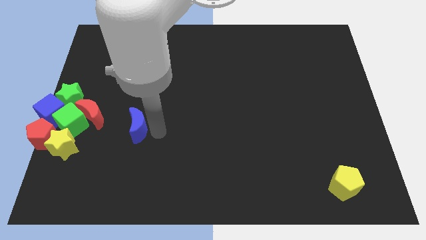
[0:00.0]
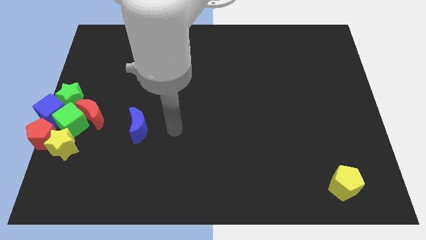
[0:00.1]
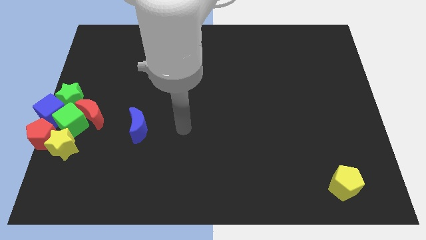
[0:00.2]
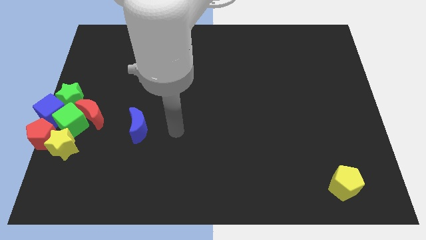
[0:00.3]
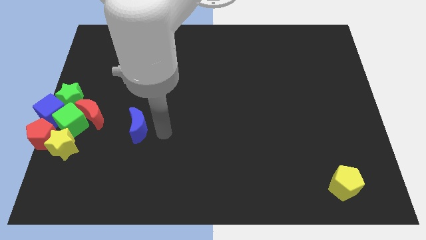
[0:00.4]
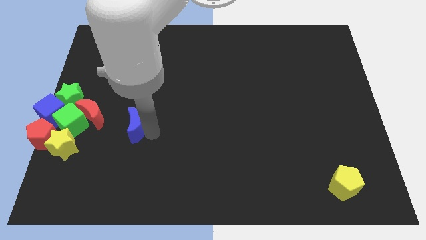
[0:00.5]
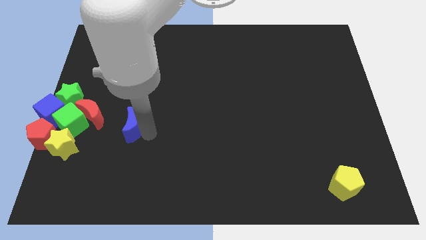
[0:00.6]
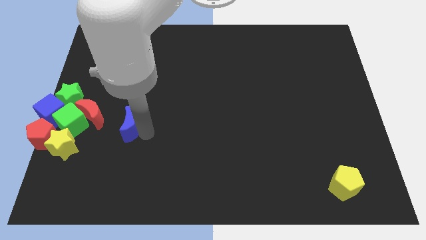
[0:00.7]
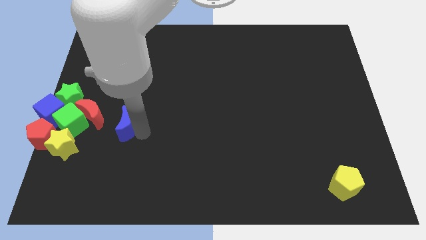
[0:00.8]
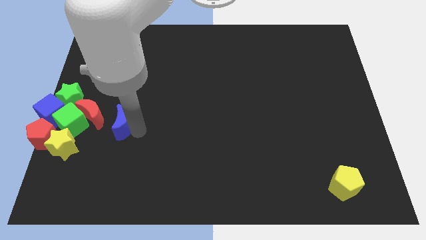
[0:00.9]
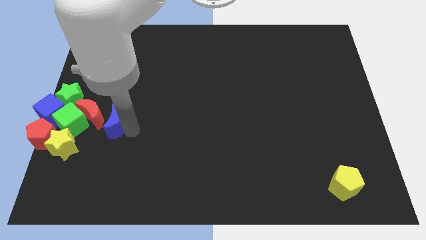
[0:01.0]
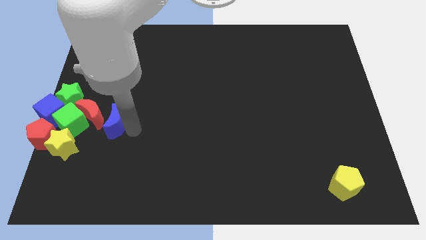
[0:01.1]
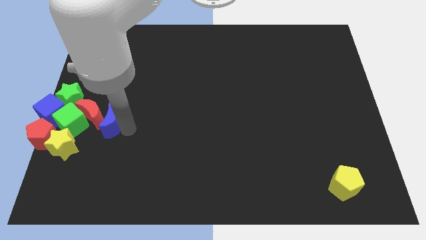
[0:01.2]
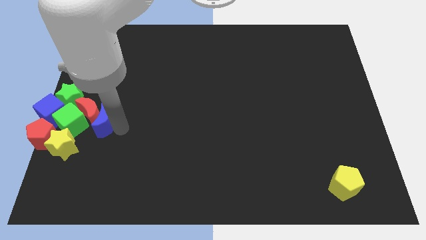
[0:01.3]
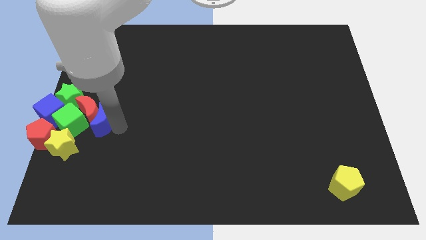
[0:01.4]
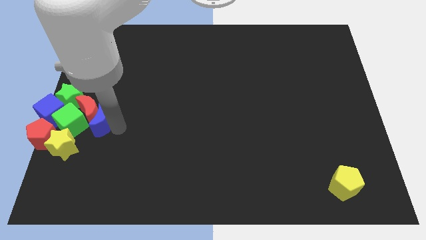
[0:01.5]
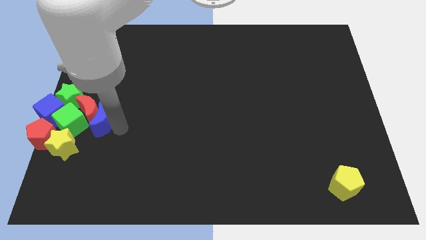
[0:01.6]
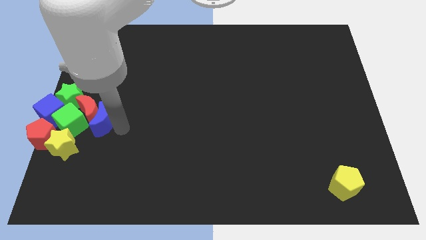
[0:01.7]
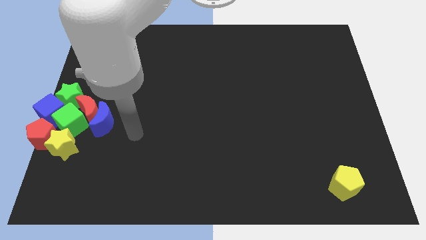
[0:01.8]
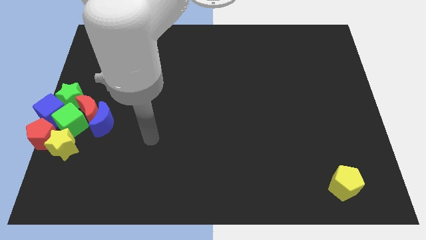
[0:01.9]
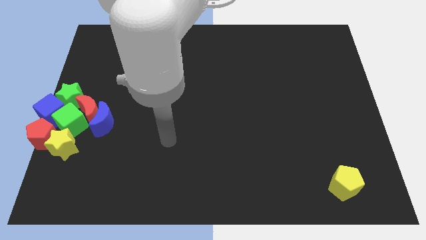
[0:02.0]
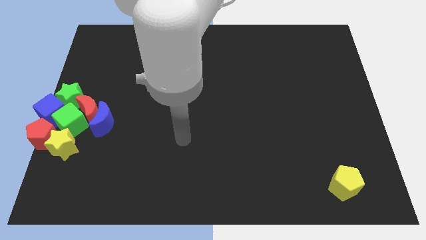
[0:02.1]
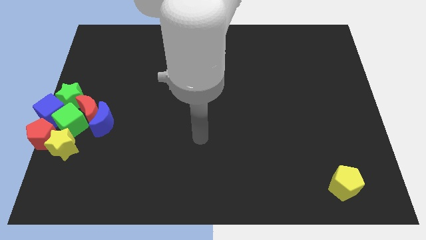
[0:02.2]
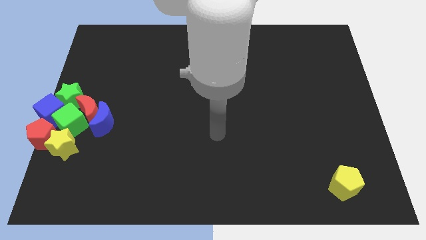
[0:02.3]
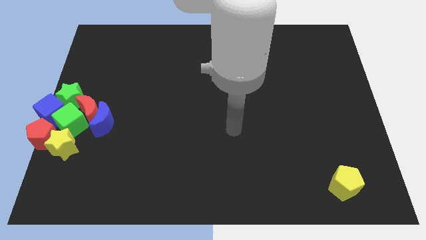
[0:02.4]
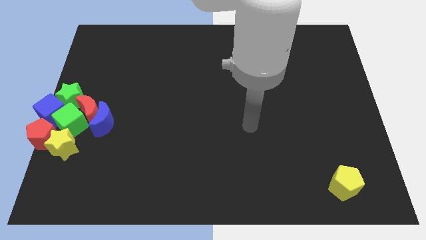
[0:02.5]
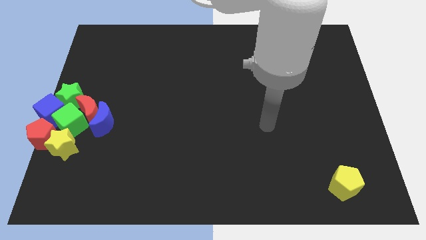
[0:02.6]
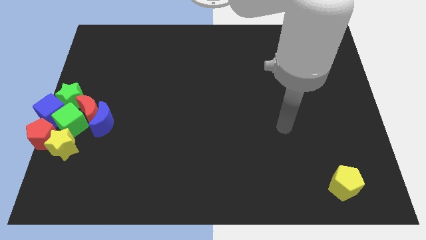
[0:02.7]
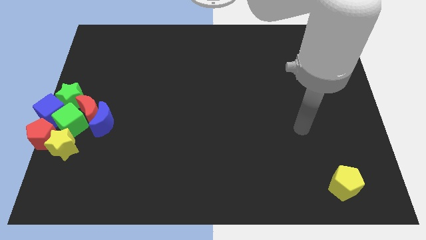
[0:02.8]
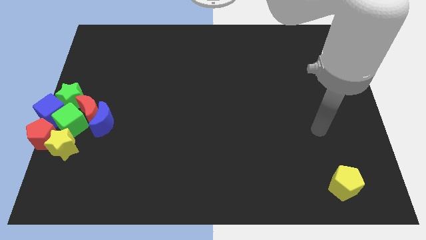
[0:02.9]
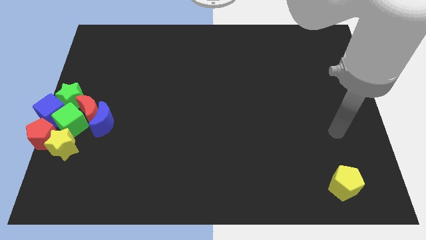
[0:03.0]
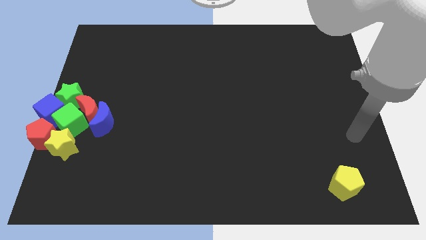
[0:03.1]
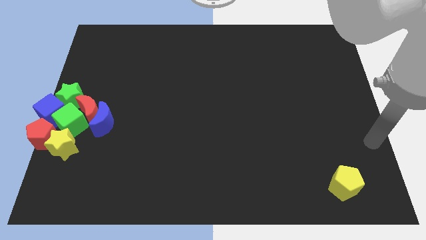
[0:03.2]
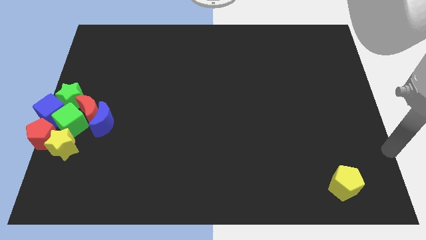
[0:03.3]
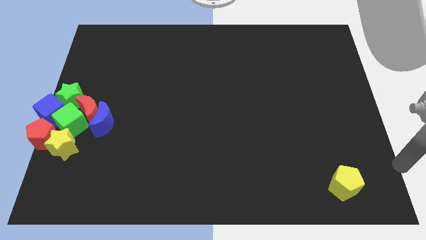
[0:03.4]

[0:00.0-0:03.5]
move blue moon close to red moon

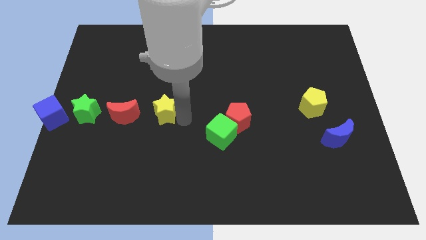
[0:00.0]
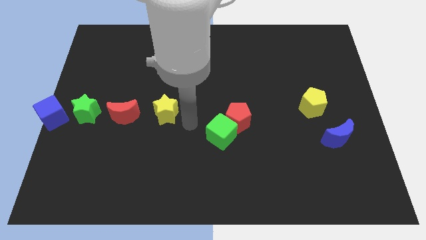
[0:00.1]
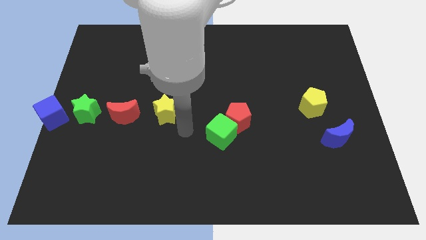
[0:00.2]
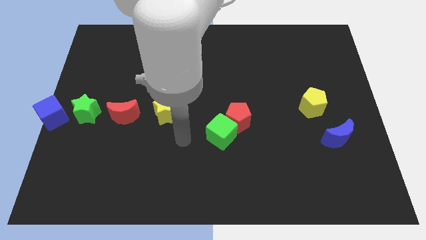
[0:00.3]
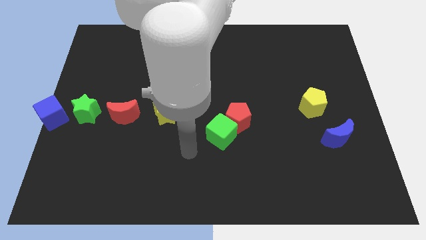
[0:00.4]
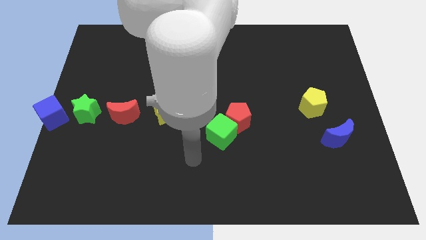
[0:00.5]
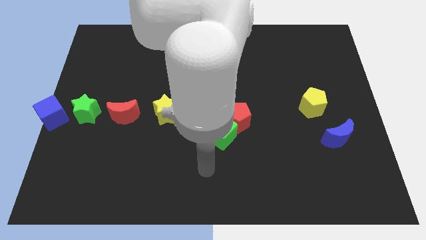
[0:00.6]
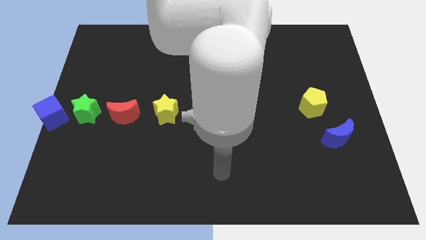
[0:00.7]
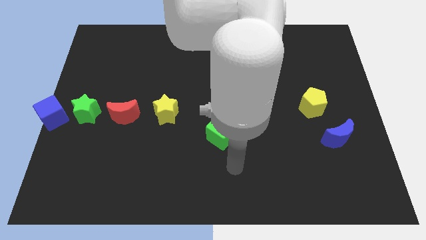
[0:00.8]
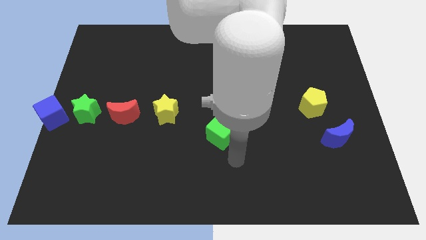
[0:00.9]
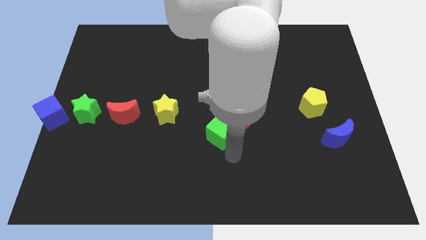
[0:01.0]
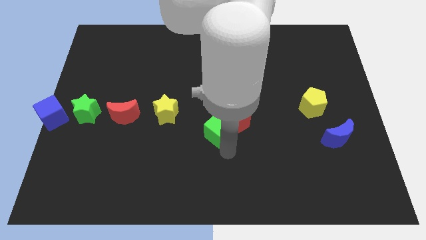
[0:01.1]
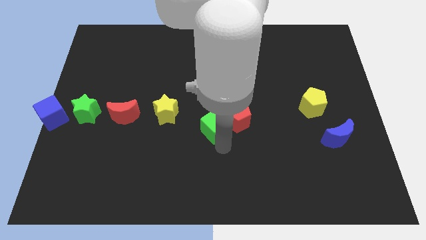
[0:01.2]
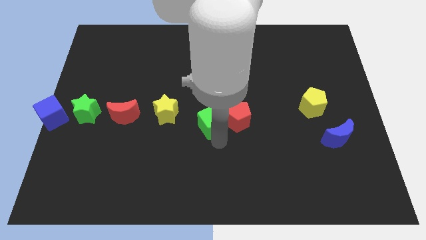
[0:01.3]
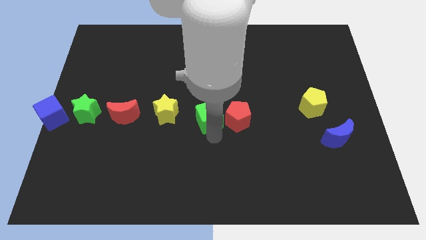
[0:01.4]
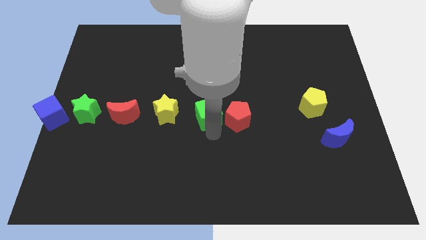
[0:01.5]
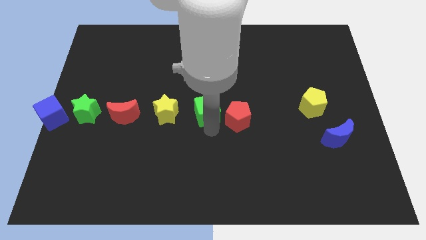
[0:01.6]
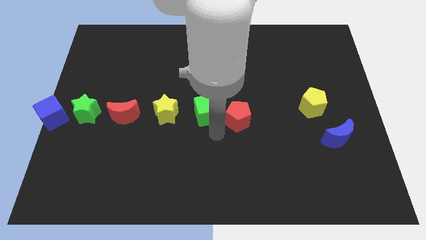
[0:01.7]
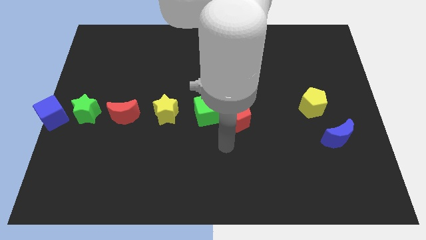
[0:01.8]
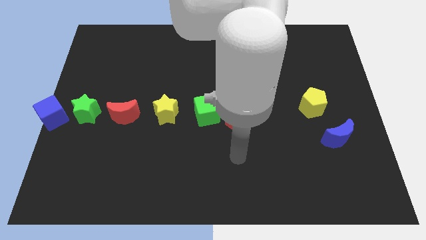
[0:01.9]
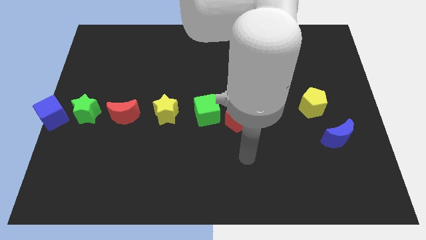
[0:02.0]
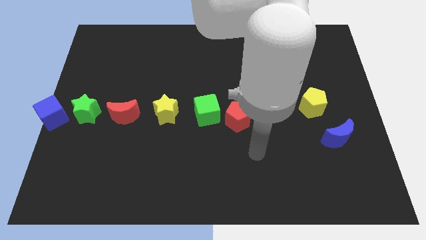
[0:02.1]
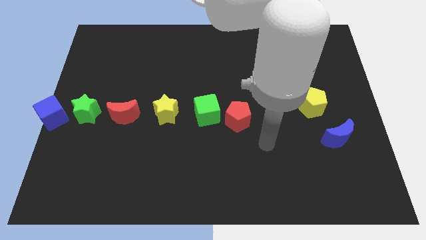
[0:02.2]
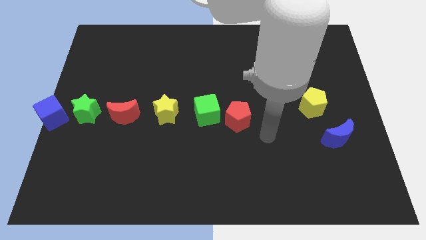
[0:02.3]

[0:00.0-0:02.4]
place green cube beside yellow star

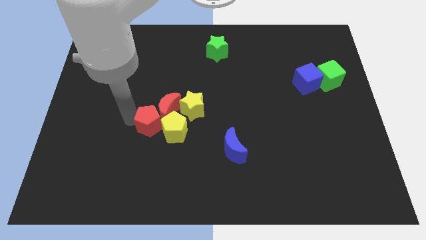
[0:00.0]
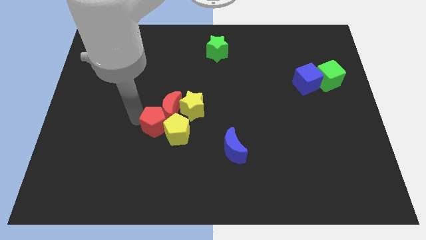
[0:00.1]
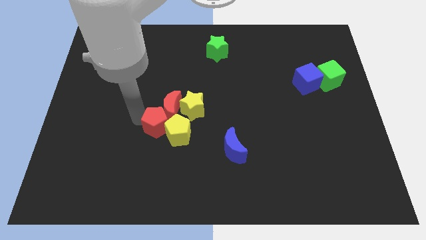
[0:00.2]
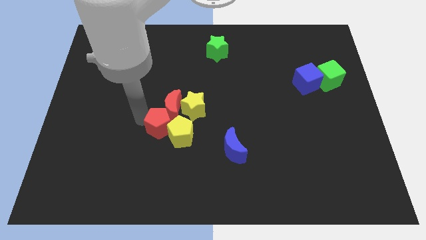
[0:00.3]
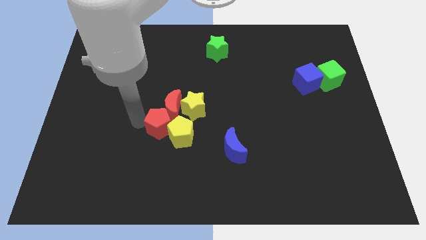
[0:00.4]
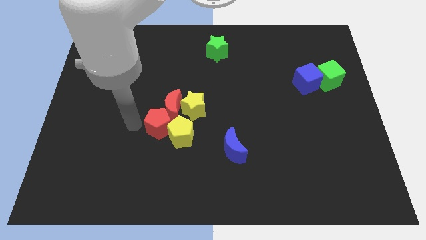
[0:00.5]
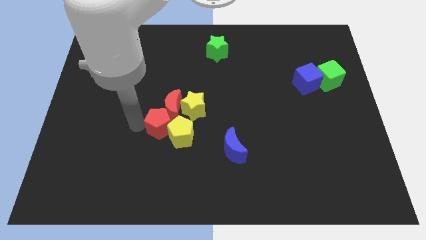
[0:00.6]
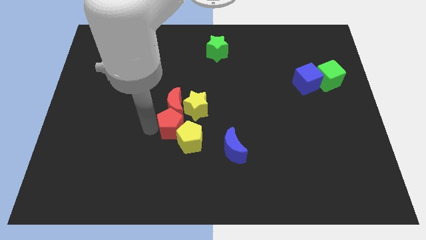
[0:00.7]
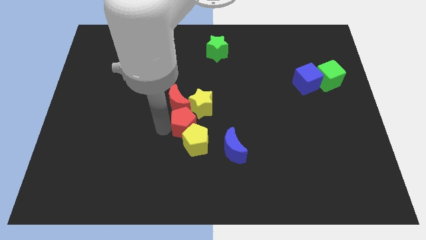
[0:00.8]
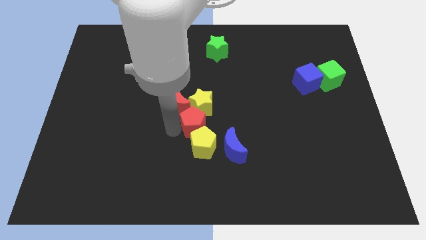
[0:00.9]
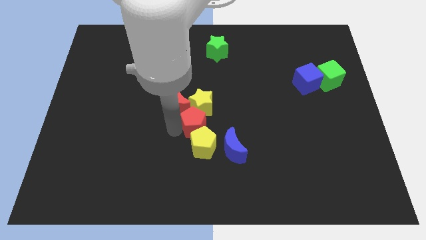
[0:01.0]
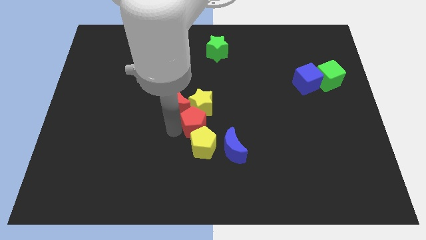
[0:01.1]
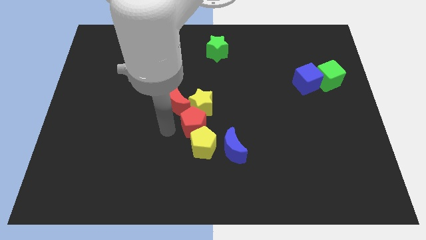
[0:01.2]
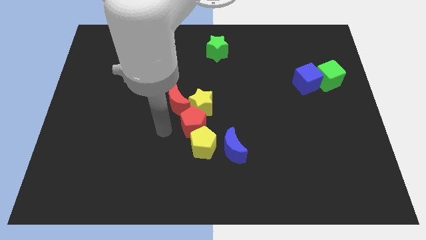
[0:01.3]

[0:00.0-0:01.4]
push a group of blocks to the center of the board

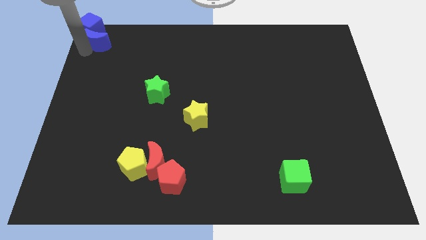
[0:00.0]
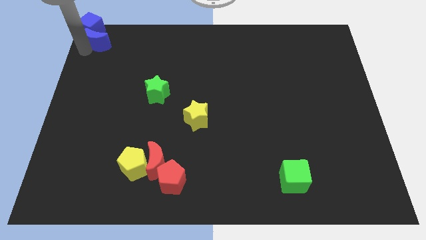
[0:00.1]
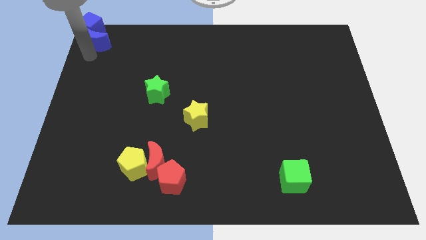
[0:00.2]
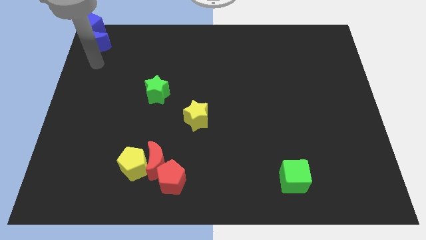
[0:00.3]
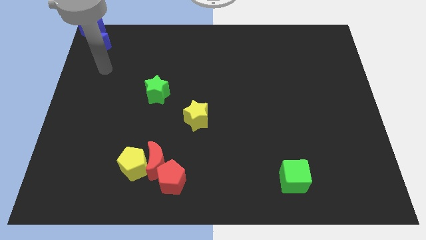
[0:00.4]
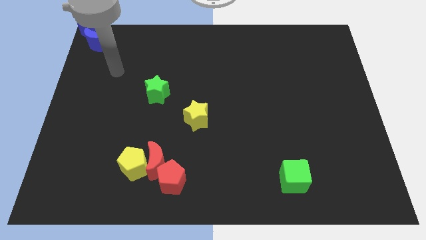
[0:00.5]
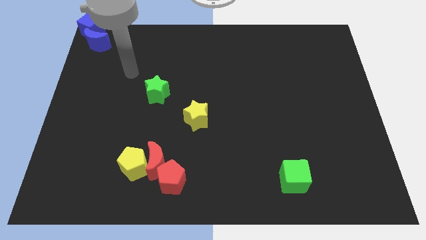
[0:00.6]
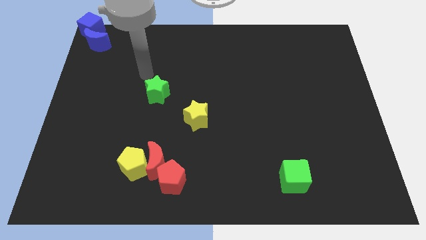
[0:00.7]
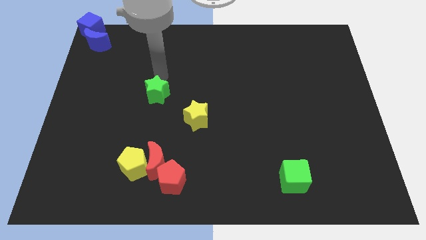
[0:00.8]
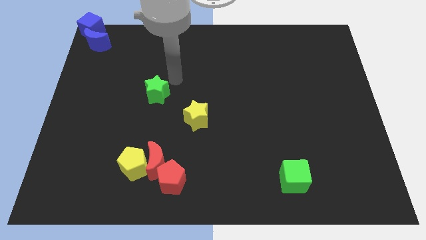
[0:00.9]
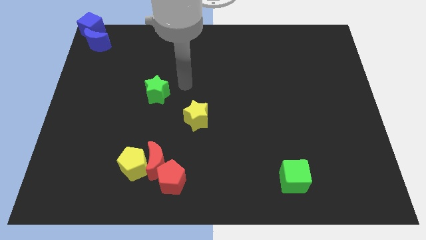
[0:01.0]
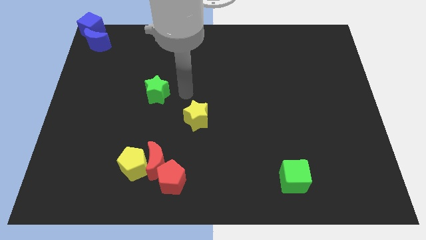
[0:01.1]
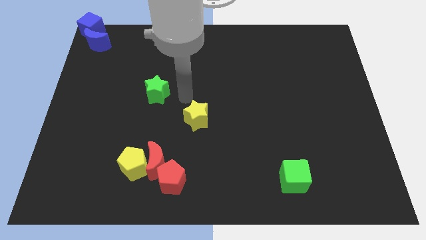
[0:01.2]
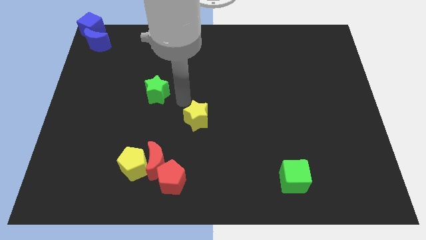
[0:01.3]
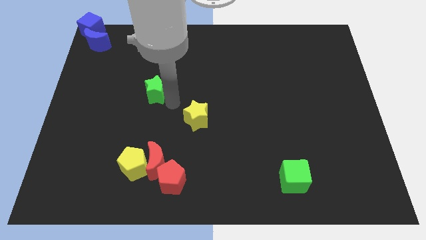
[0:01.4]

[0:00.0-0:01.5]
go away from the blue moon

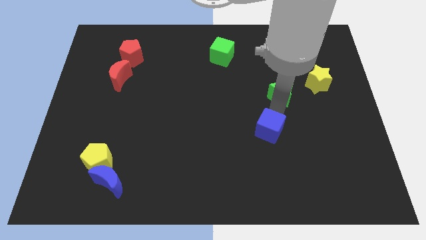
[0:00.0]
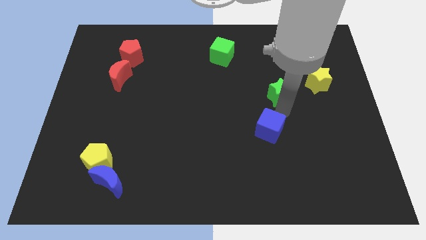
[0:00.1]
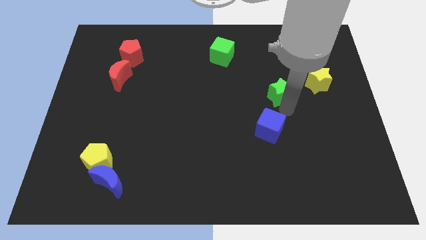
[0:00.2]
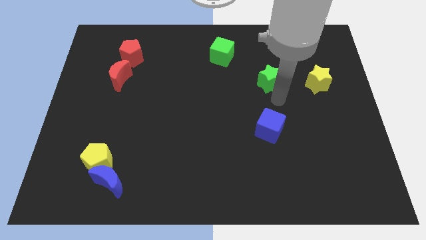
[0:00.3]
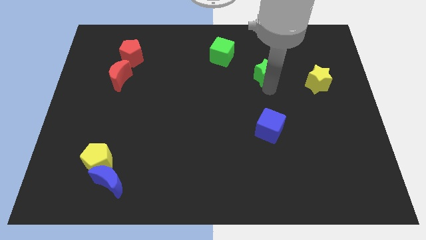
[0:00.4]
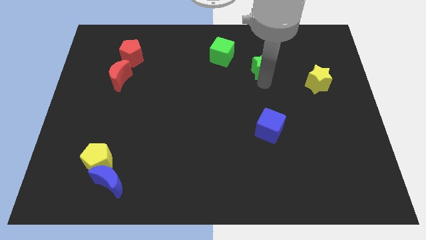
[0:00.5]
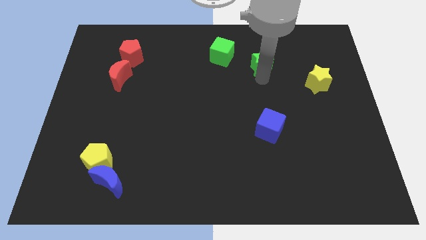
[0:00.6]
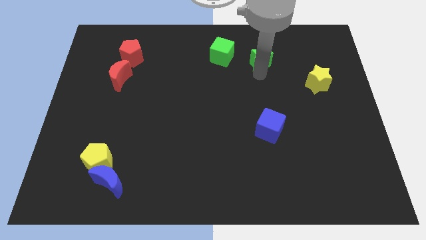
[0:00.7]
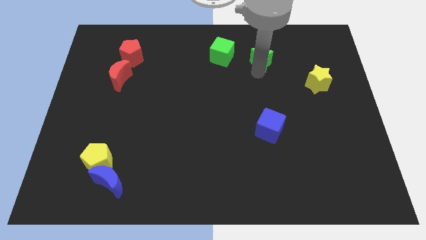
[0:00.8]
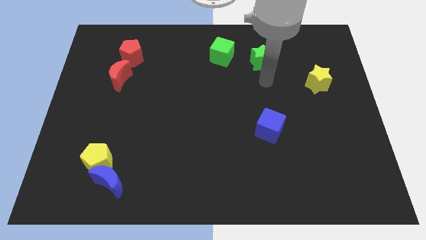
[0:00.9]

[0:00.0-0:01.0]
move the green star right to the green cube
